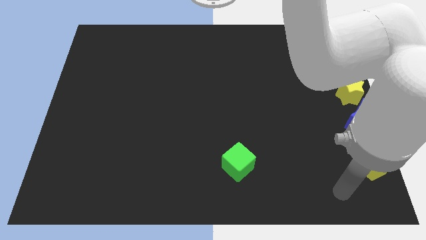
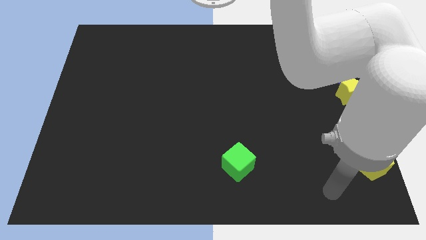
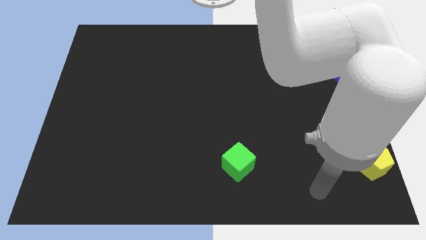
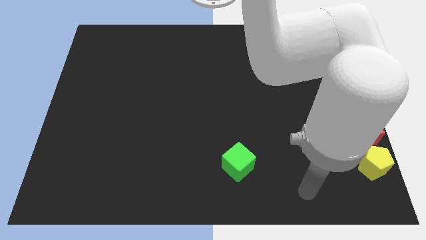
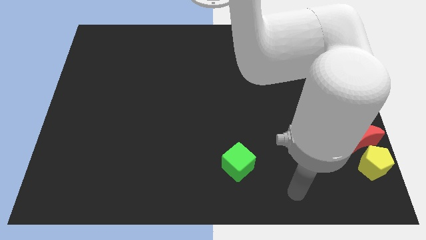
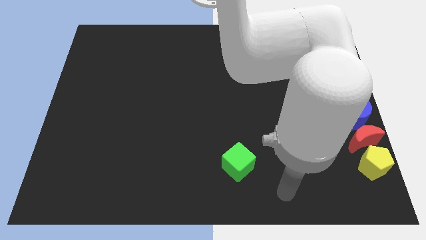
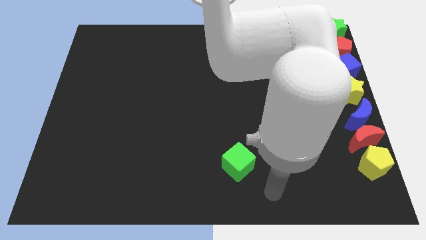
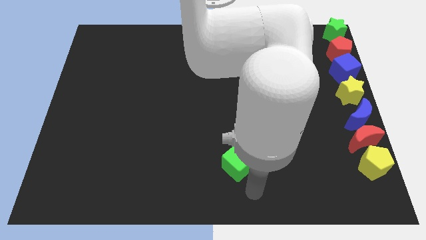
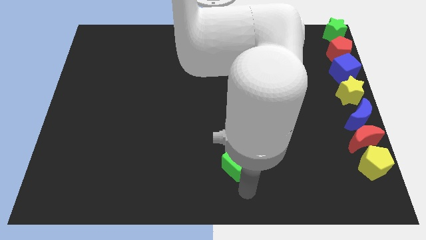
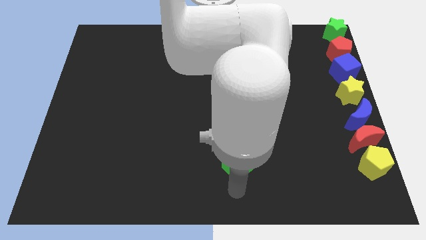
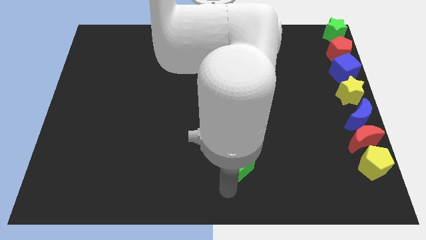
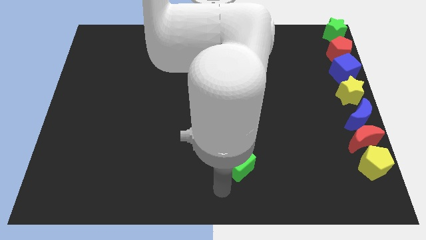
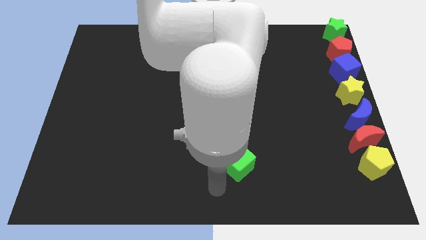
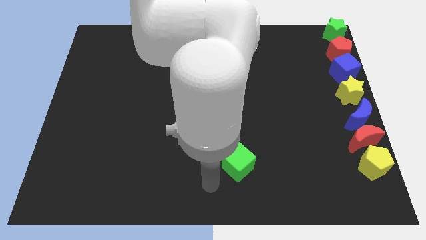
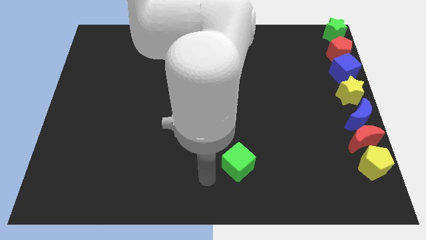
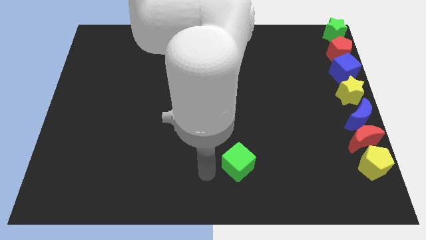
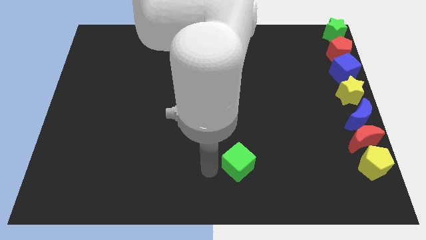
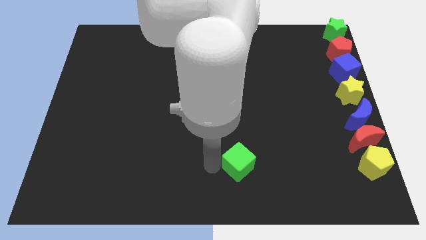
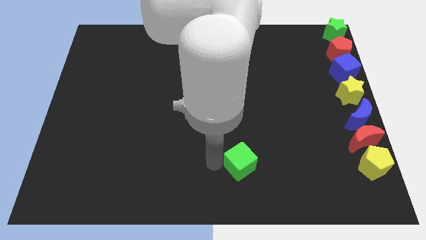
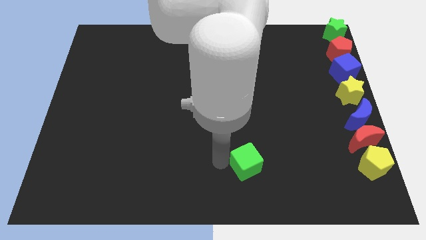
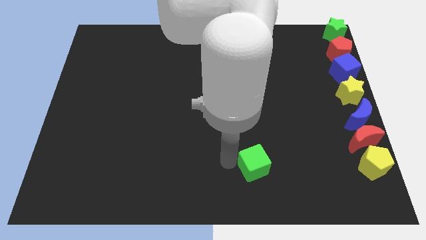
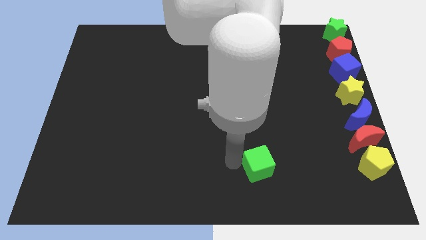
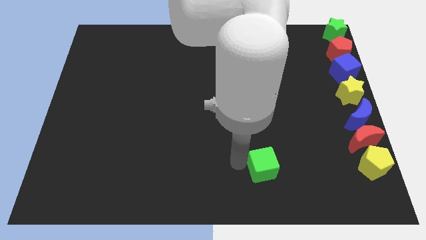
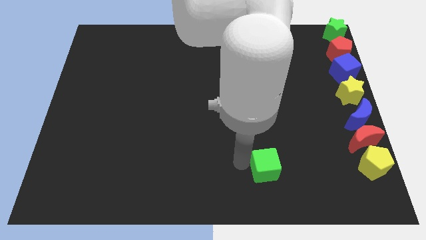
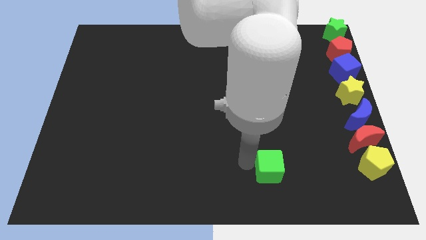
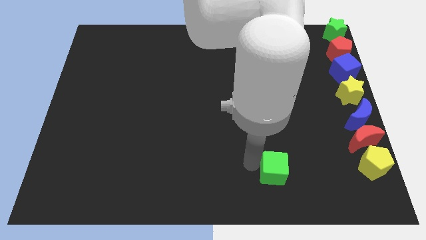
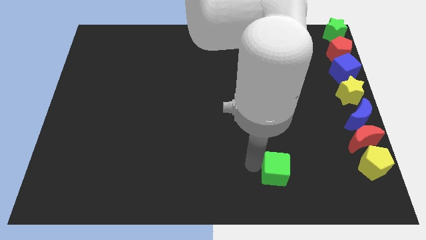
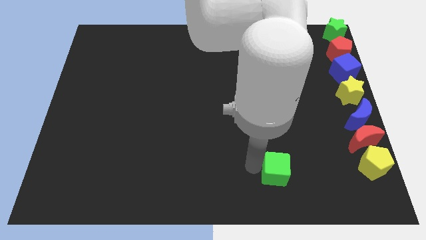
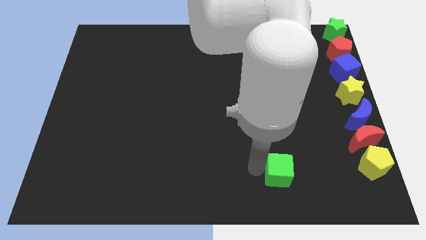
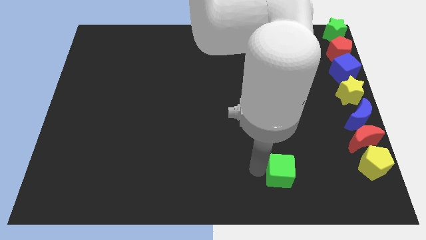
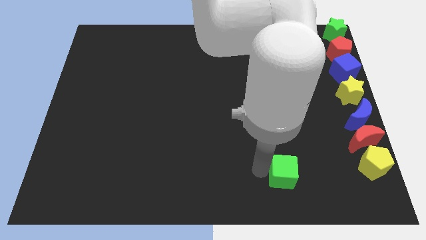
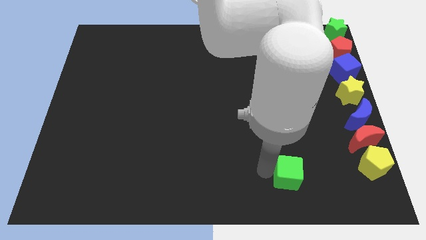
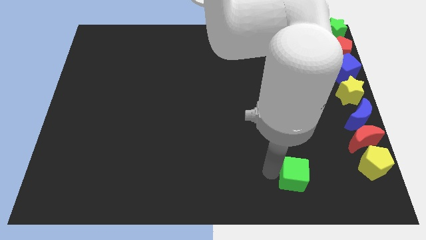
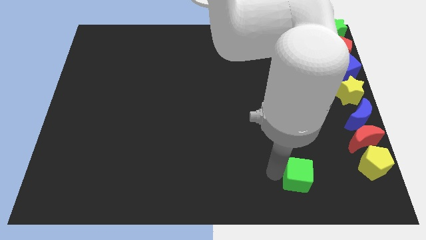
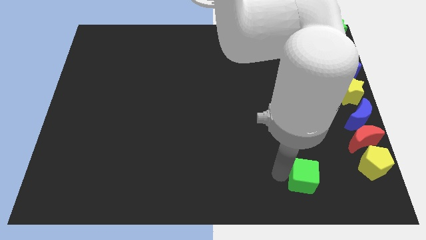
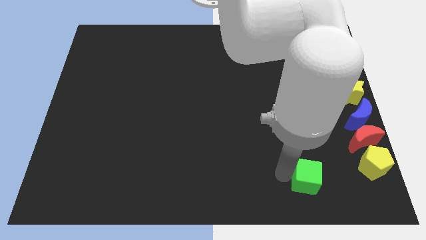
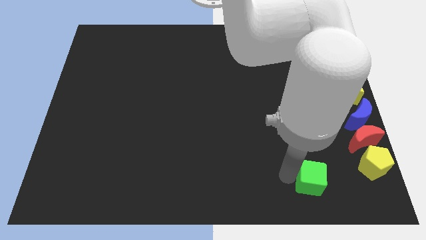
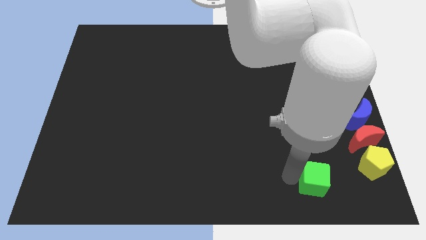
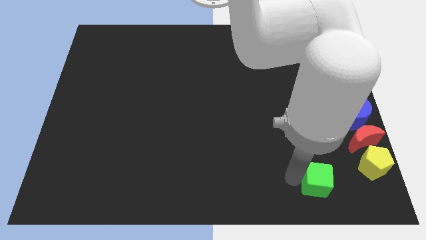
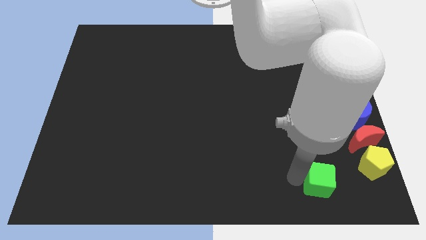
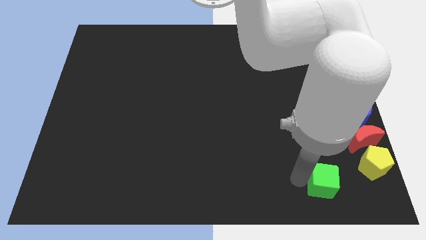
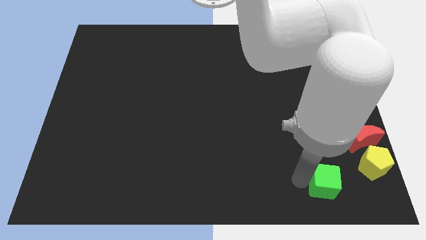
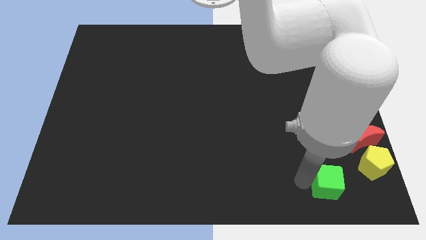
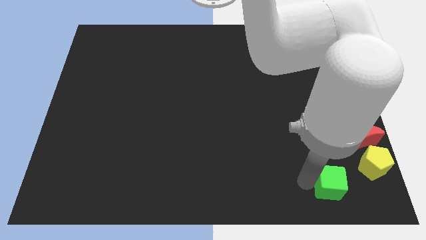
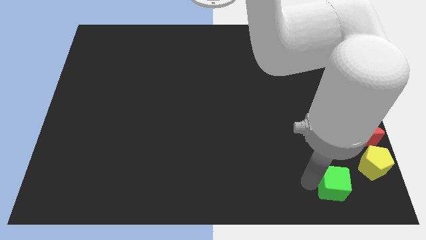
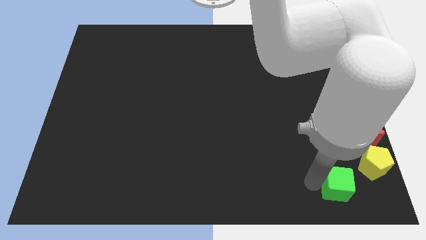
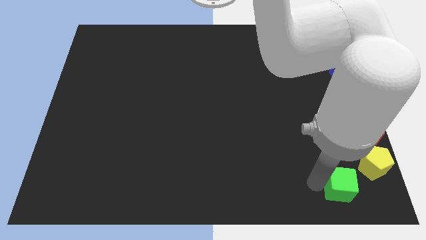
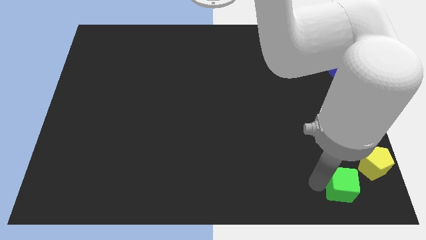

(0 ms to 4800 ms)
push the green cube towards the yellow pentagon

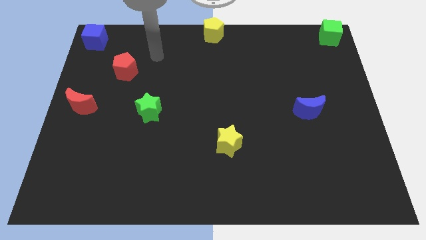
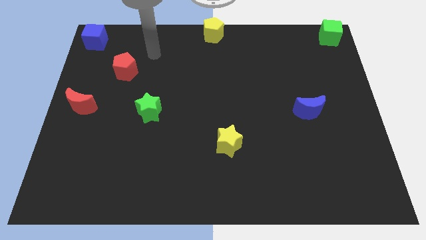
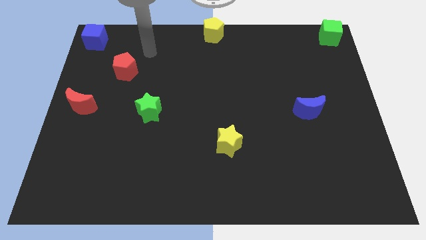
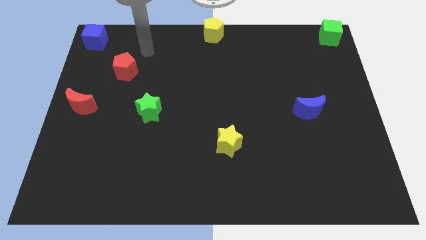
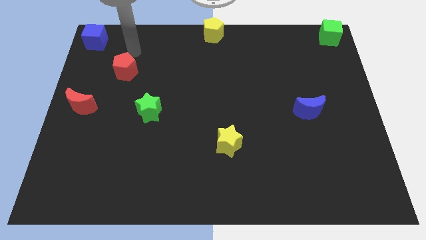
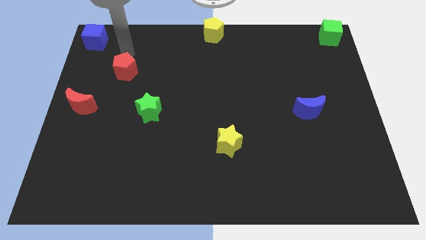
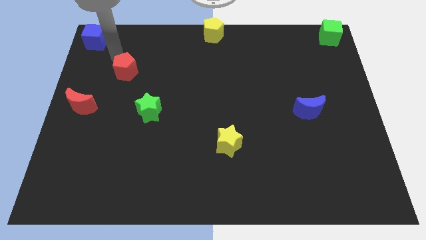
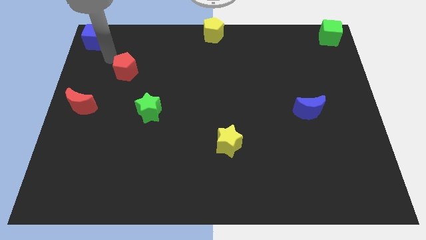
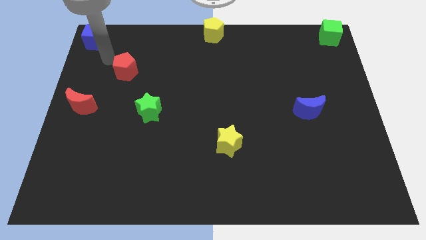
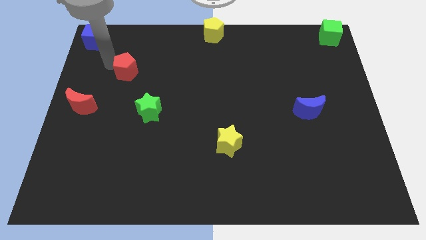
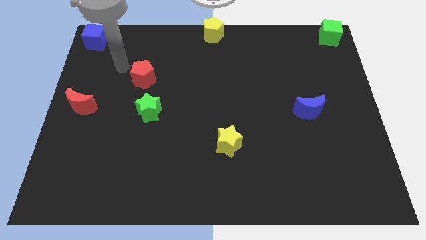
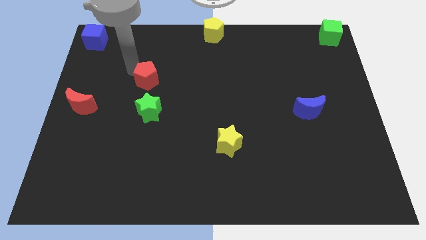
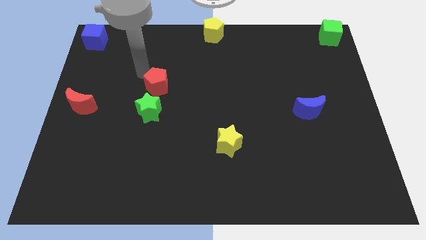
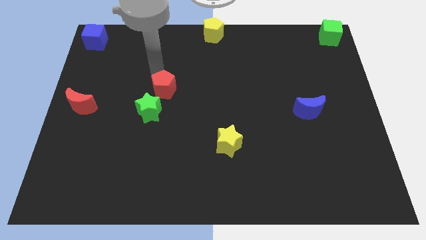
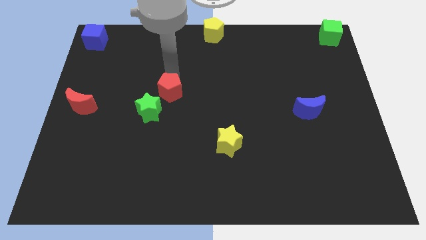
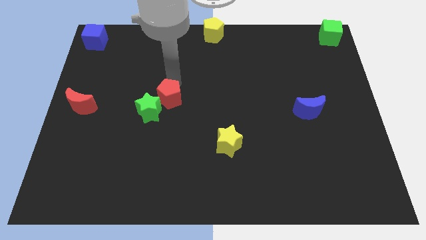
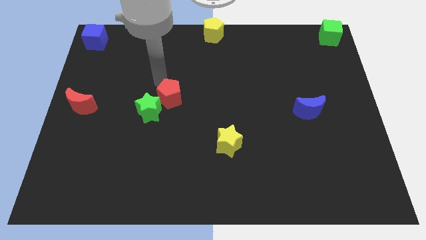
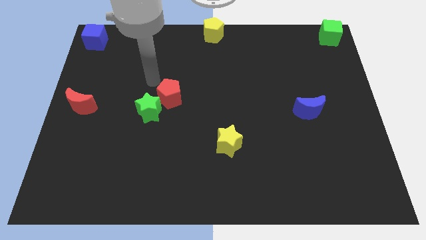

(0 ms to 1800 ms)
push the red pentagon towards the green star

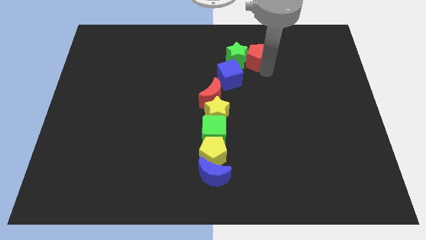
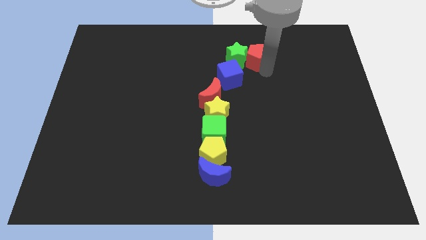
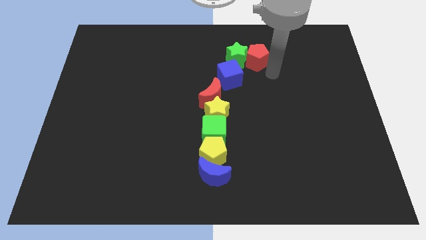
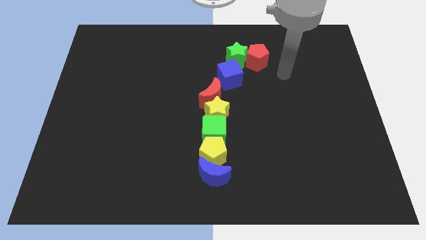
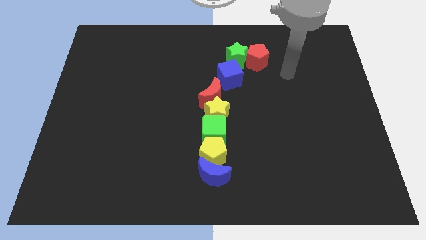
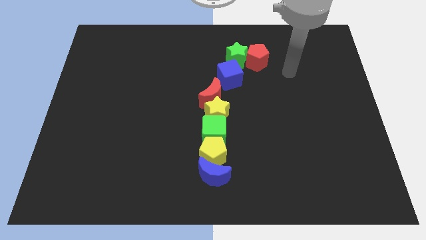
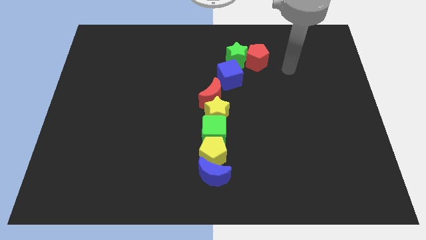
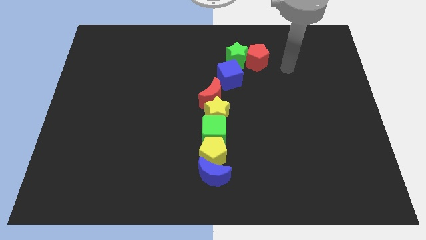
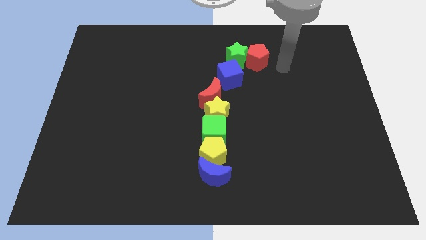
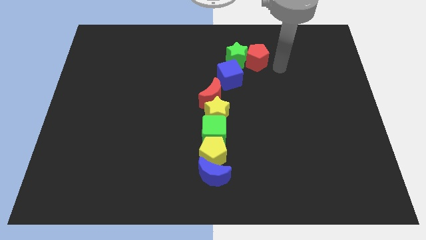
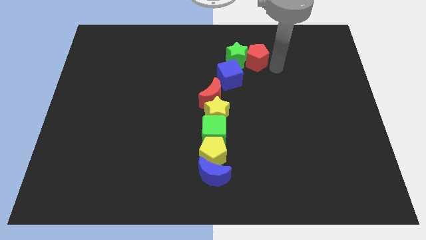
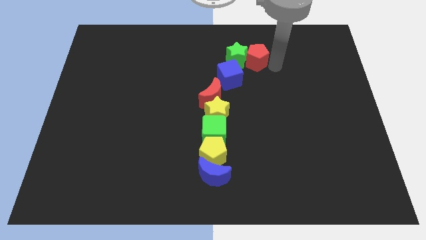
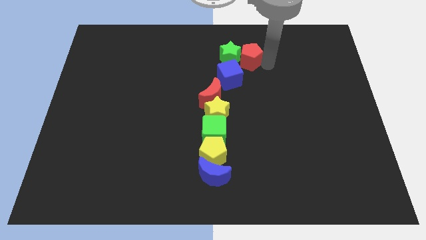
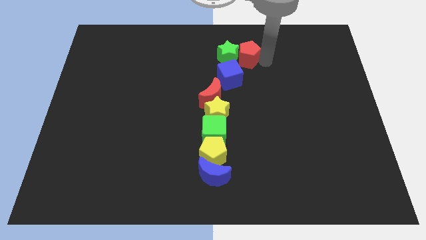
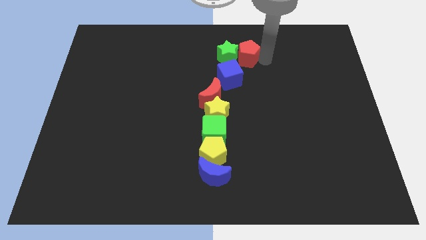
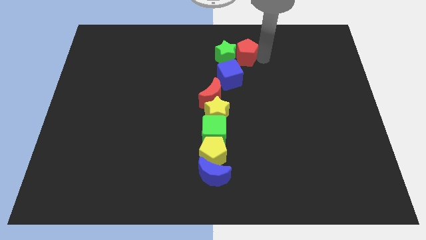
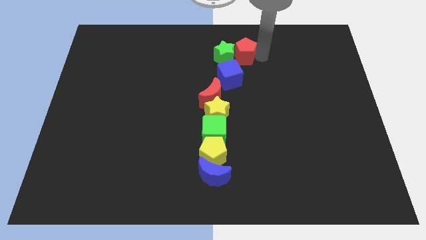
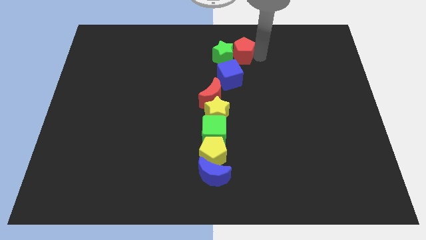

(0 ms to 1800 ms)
move the green star along with the red pentagon slightly to the left

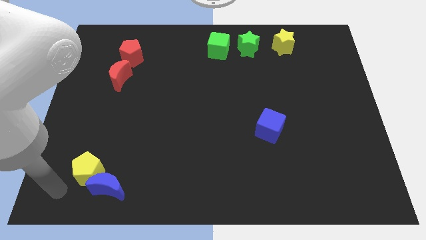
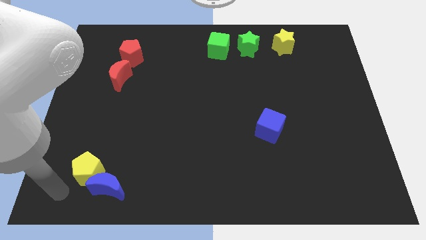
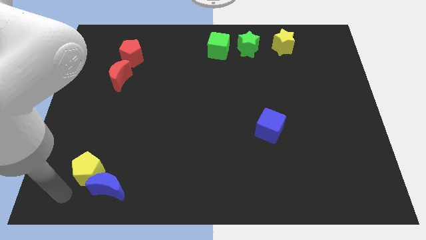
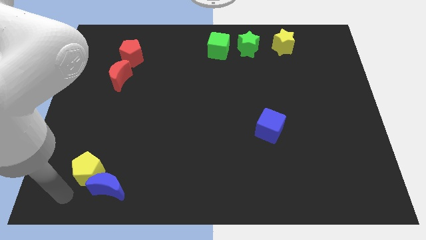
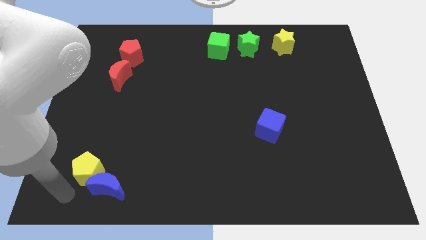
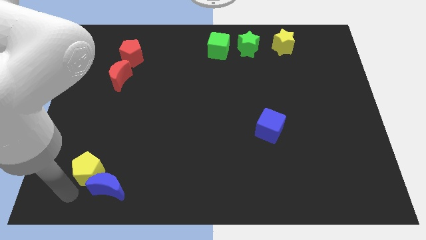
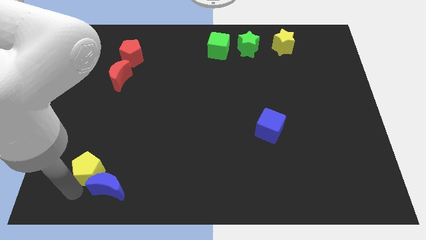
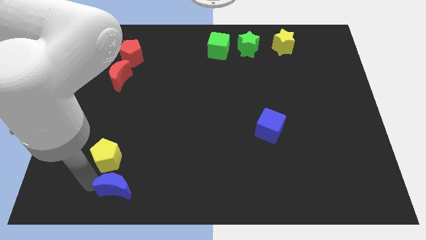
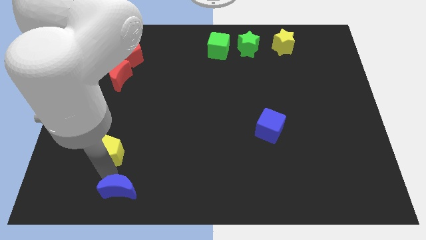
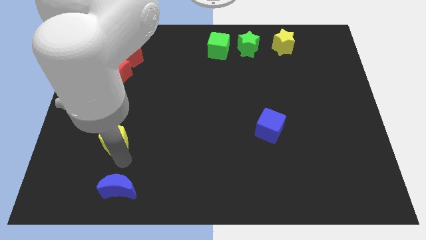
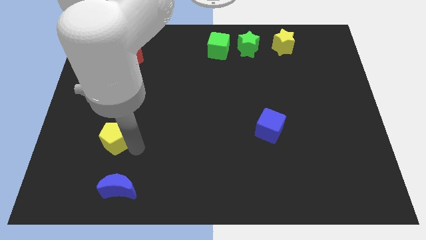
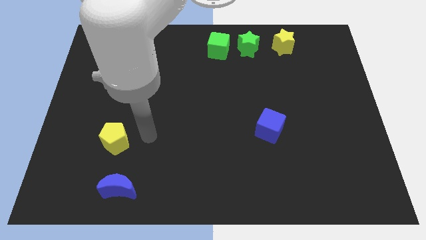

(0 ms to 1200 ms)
separate the yellow pentagon and blue moon
